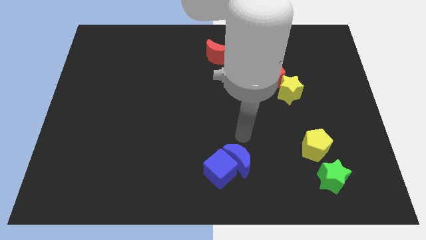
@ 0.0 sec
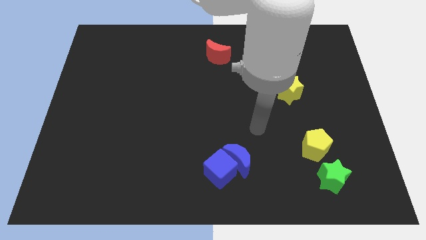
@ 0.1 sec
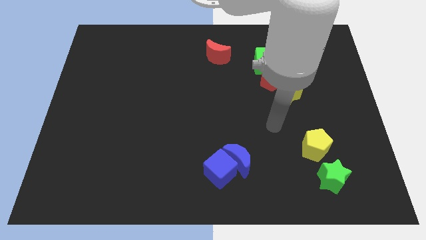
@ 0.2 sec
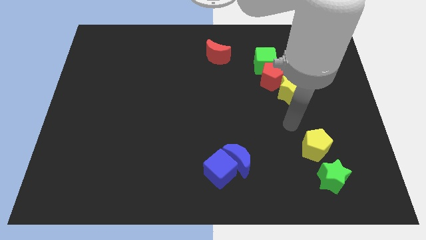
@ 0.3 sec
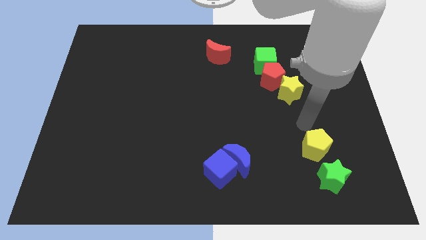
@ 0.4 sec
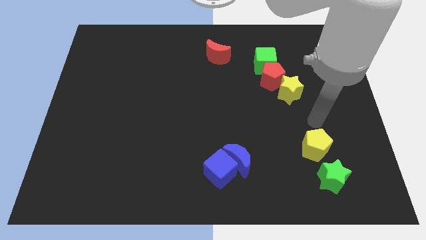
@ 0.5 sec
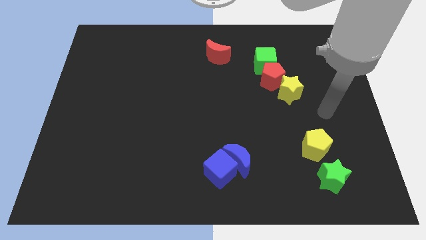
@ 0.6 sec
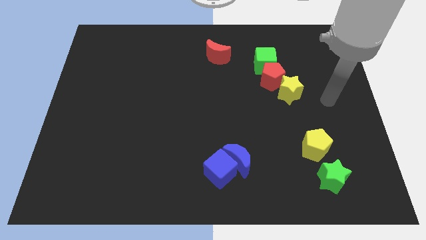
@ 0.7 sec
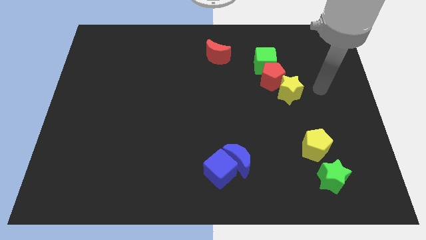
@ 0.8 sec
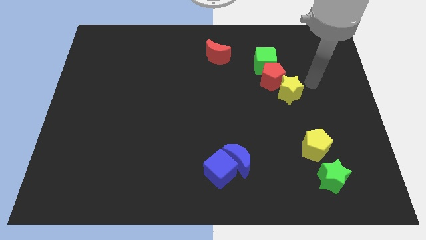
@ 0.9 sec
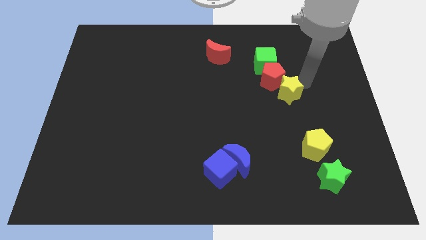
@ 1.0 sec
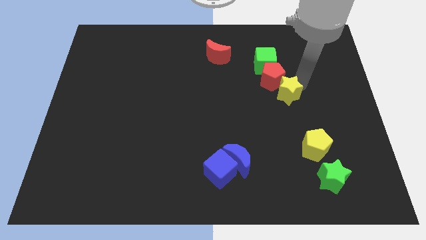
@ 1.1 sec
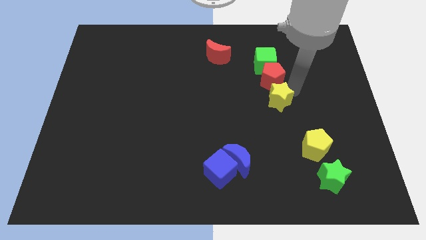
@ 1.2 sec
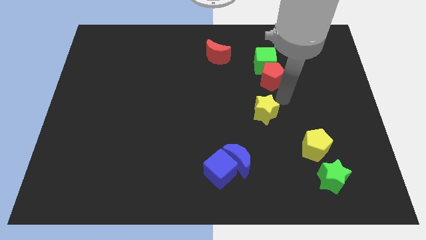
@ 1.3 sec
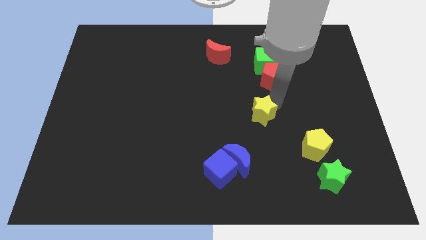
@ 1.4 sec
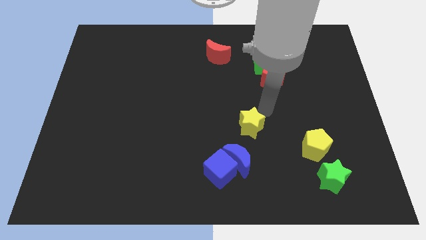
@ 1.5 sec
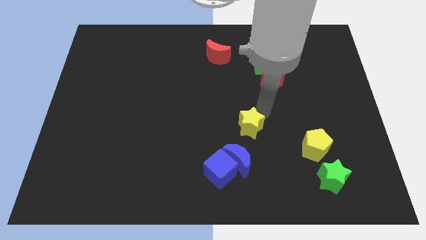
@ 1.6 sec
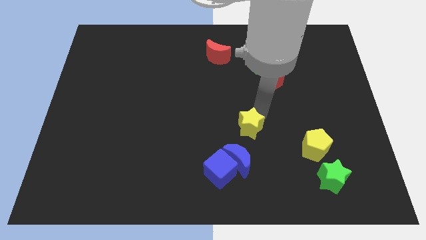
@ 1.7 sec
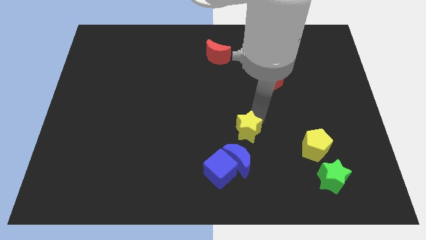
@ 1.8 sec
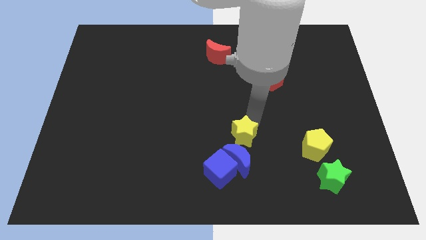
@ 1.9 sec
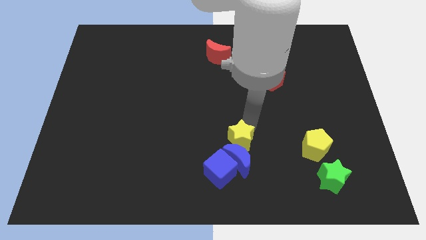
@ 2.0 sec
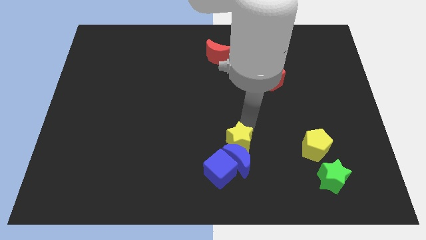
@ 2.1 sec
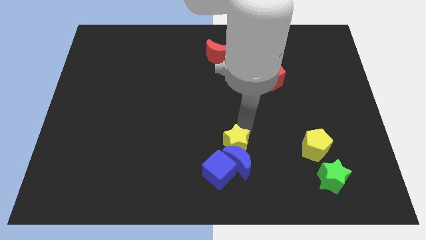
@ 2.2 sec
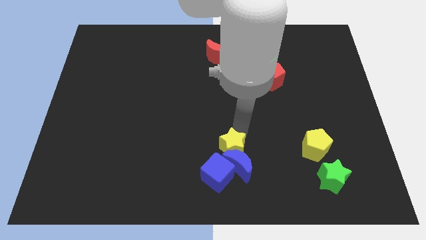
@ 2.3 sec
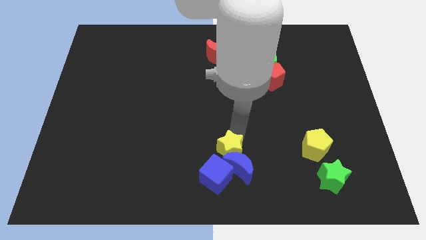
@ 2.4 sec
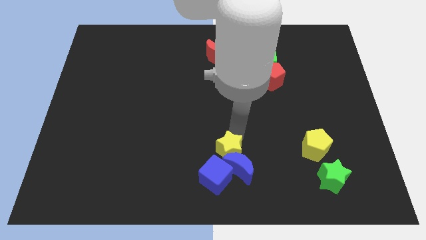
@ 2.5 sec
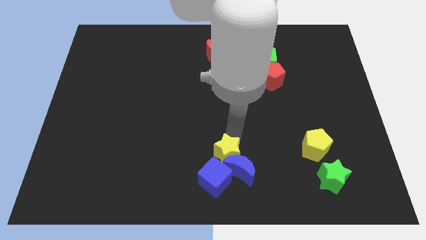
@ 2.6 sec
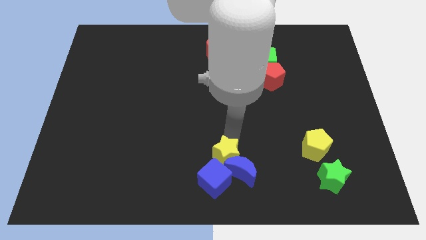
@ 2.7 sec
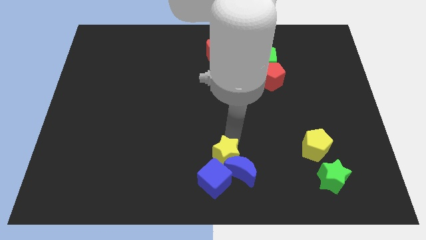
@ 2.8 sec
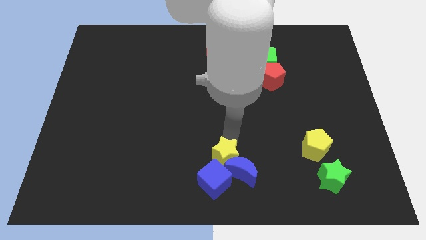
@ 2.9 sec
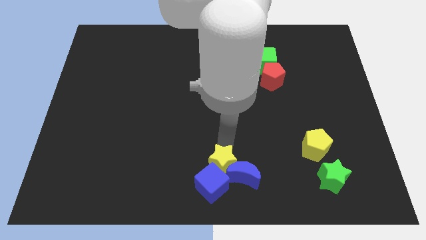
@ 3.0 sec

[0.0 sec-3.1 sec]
move the yellow star into the blue blocks

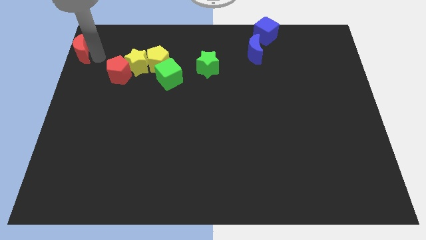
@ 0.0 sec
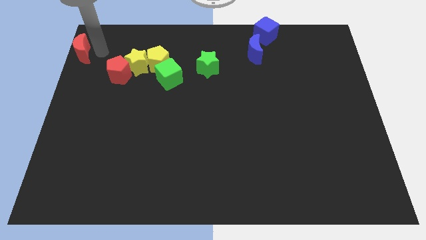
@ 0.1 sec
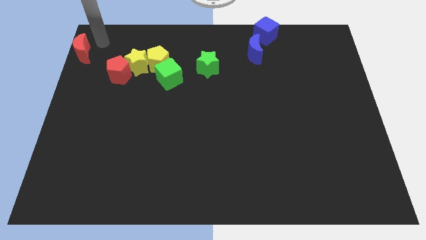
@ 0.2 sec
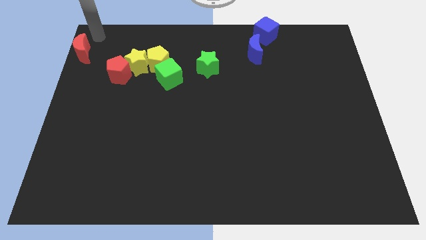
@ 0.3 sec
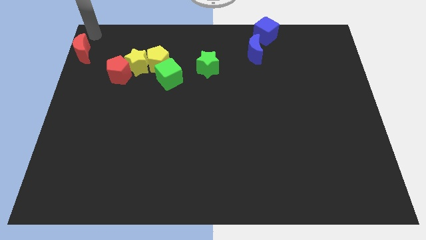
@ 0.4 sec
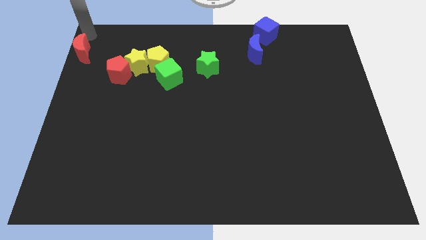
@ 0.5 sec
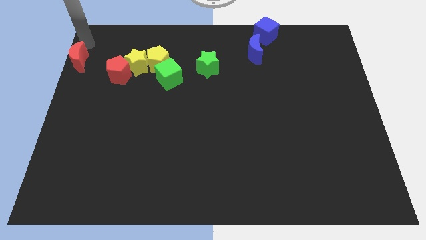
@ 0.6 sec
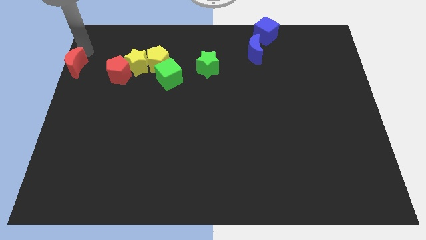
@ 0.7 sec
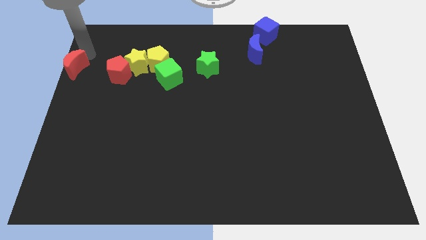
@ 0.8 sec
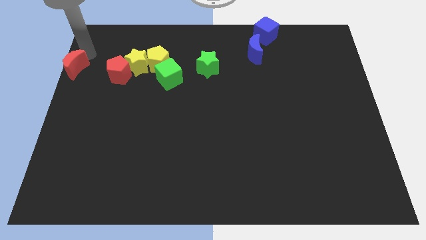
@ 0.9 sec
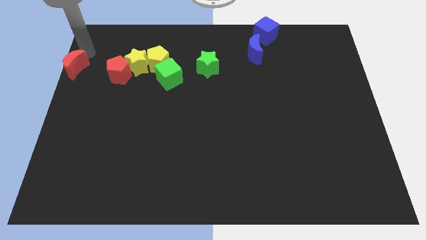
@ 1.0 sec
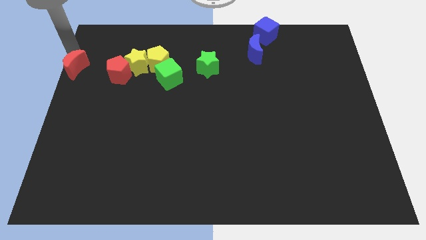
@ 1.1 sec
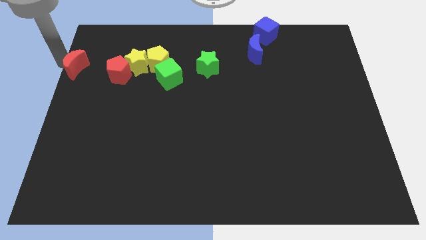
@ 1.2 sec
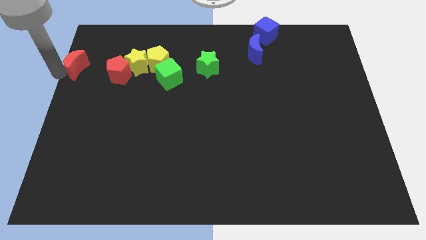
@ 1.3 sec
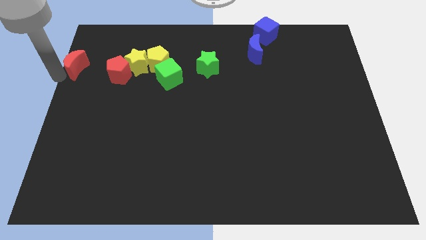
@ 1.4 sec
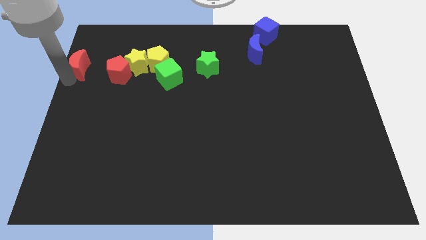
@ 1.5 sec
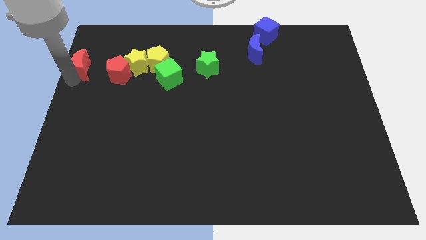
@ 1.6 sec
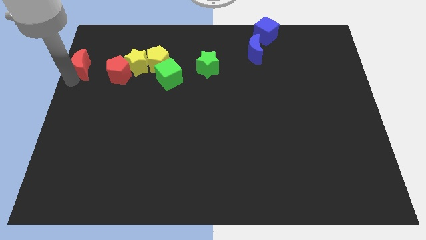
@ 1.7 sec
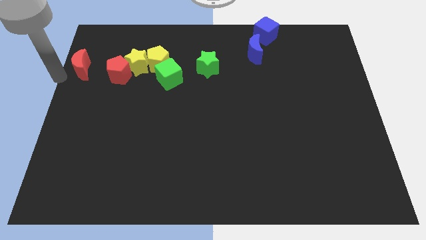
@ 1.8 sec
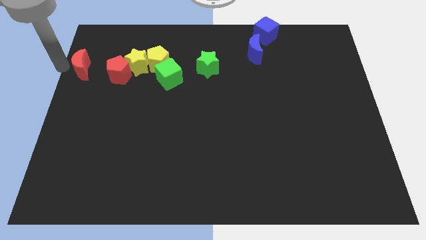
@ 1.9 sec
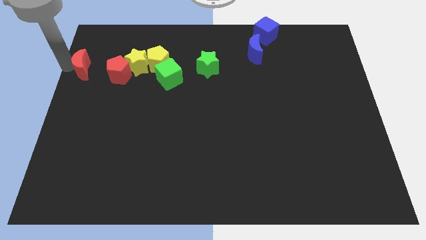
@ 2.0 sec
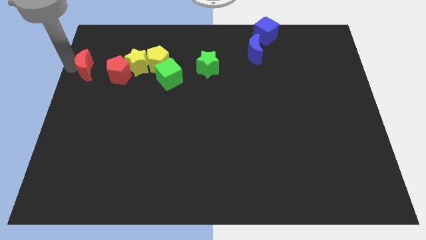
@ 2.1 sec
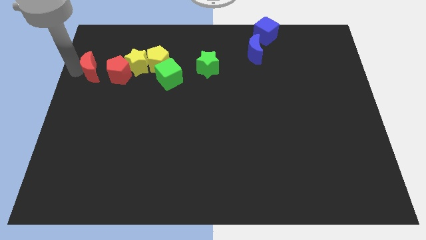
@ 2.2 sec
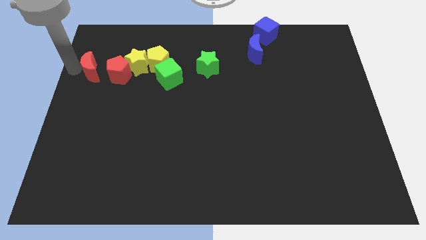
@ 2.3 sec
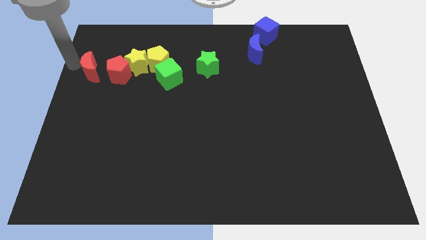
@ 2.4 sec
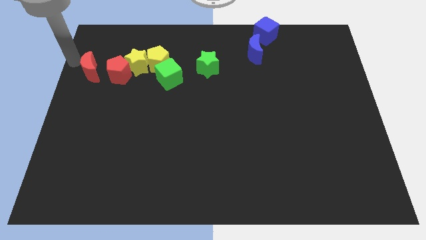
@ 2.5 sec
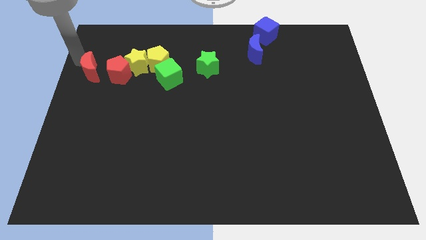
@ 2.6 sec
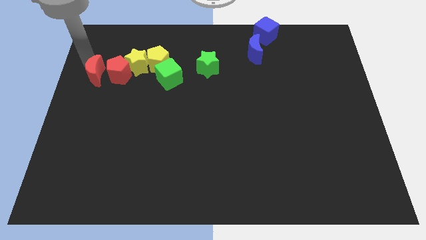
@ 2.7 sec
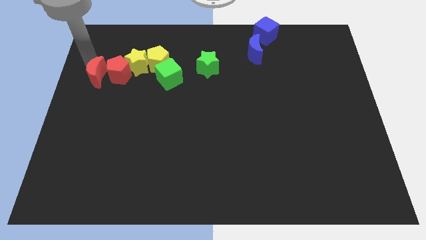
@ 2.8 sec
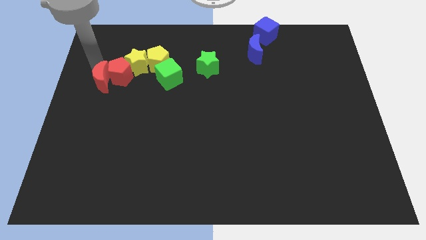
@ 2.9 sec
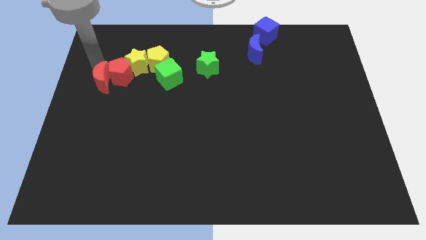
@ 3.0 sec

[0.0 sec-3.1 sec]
push the red crescent into the red pentagon

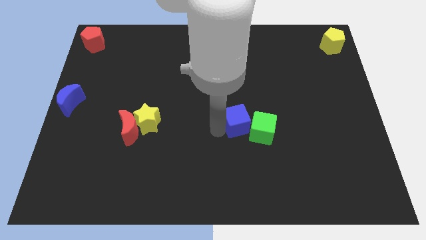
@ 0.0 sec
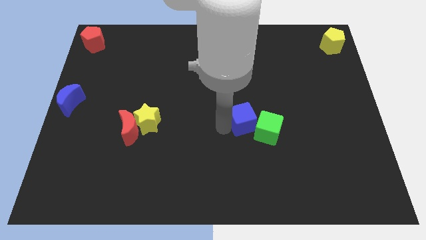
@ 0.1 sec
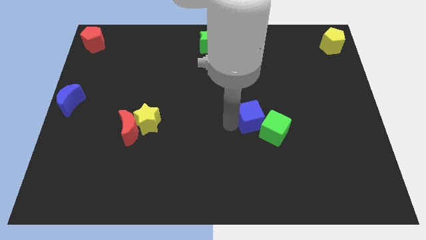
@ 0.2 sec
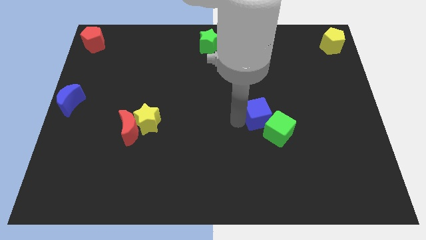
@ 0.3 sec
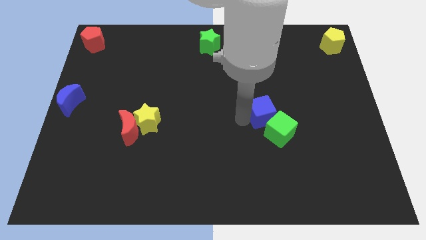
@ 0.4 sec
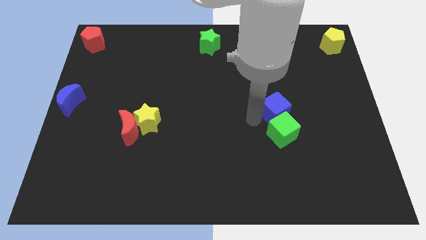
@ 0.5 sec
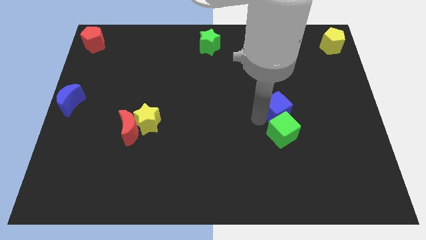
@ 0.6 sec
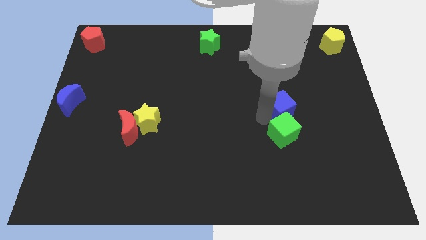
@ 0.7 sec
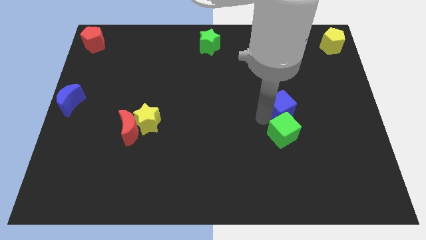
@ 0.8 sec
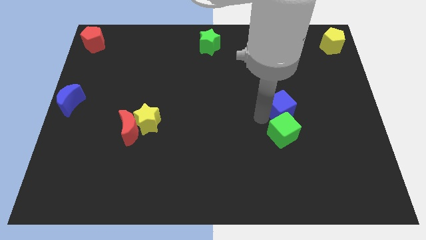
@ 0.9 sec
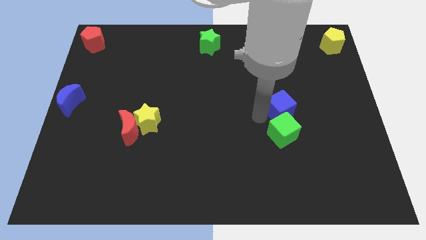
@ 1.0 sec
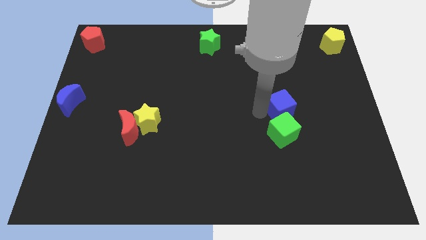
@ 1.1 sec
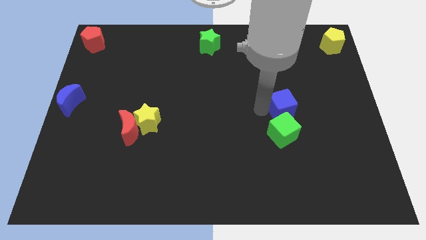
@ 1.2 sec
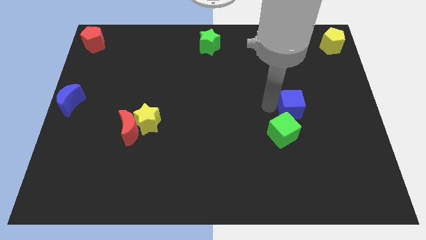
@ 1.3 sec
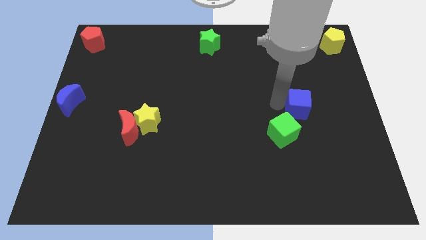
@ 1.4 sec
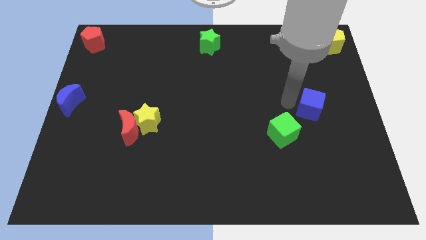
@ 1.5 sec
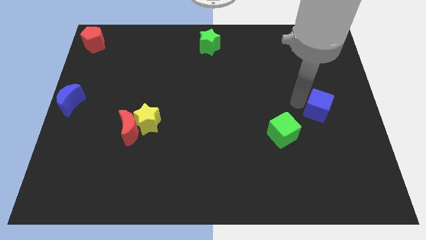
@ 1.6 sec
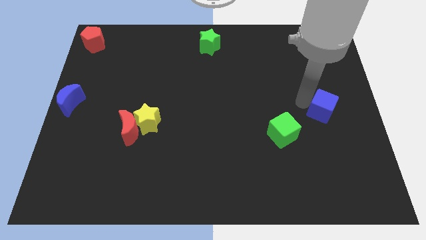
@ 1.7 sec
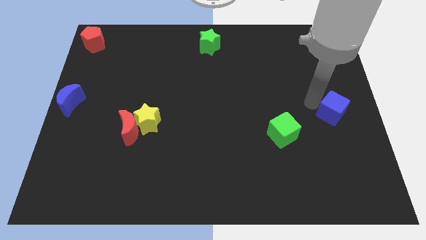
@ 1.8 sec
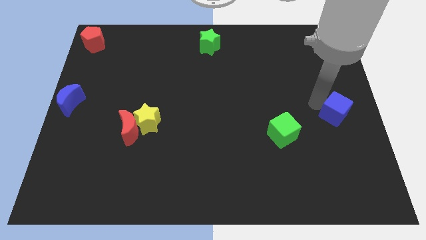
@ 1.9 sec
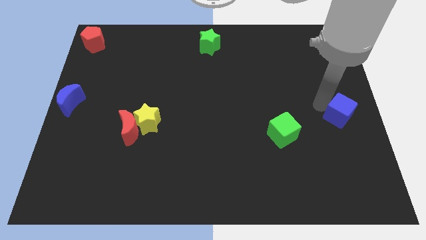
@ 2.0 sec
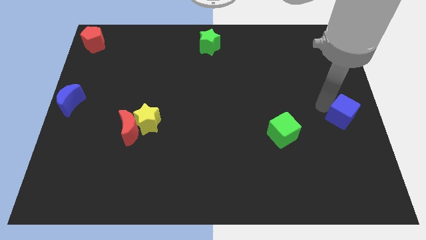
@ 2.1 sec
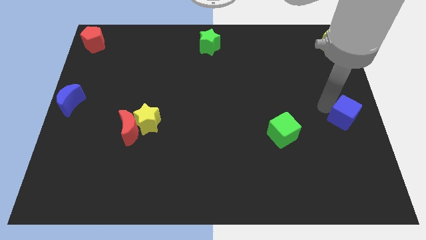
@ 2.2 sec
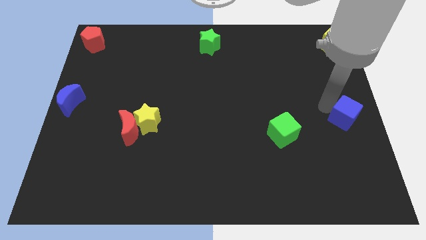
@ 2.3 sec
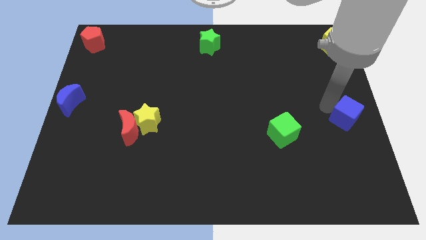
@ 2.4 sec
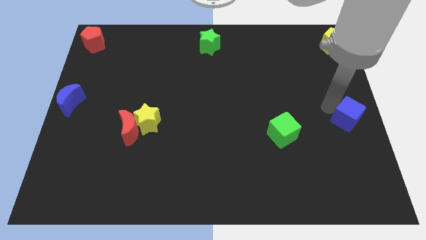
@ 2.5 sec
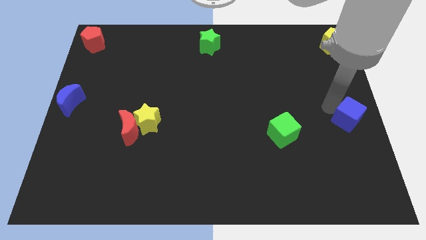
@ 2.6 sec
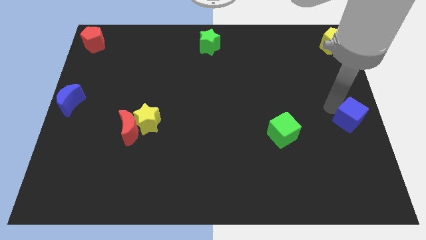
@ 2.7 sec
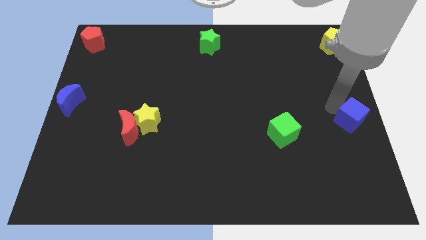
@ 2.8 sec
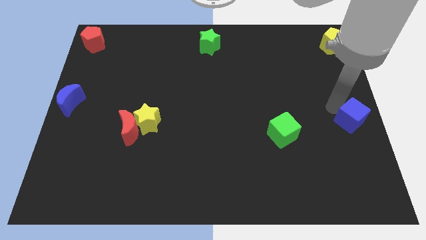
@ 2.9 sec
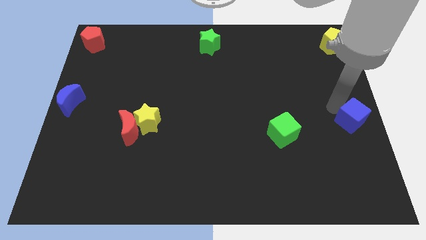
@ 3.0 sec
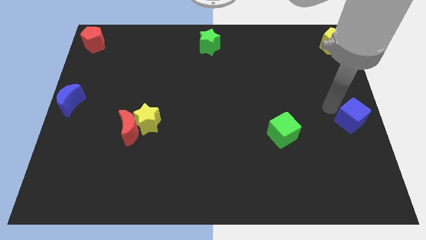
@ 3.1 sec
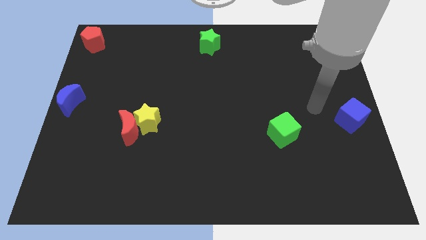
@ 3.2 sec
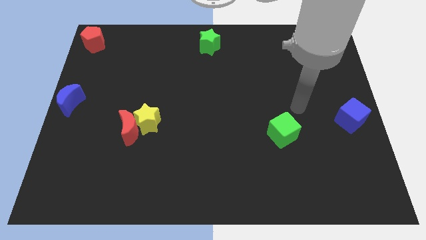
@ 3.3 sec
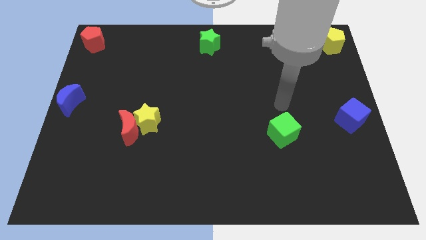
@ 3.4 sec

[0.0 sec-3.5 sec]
place the blue cube at the right side of the table
